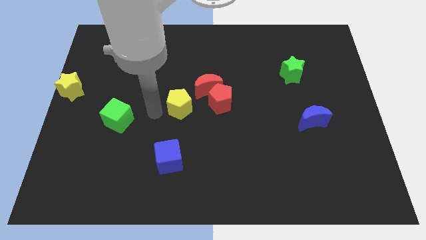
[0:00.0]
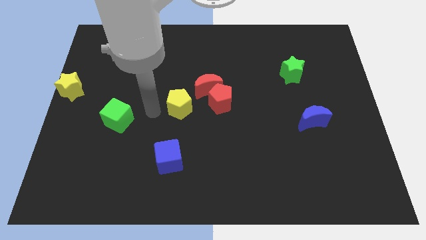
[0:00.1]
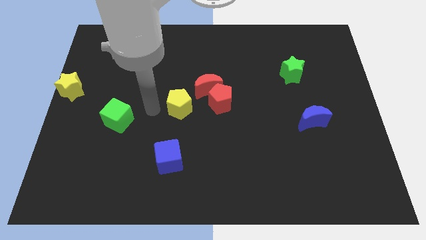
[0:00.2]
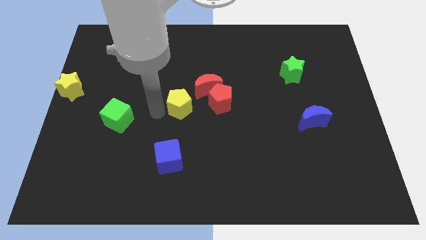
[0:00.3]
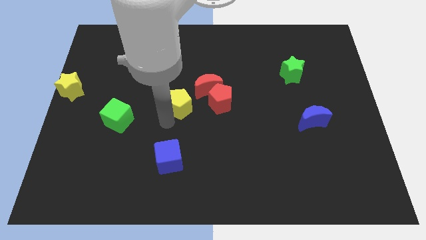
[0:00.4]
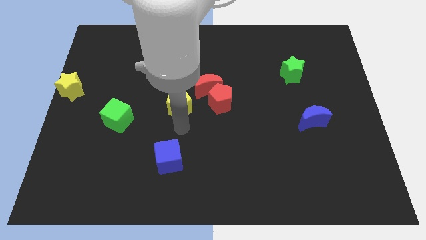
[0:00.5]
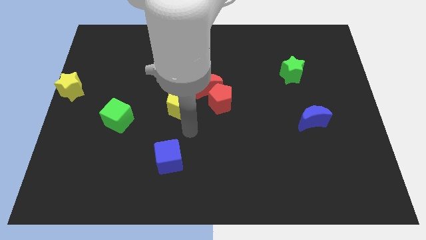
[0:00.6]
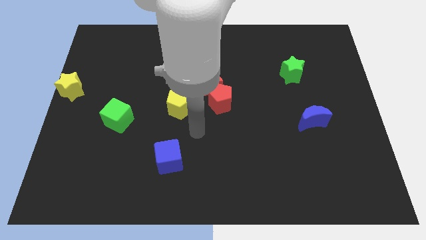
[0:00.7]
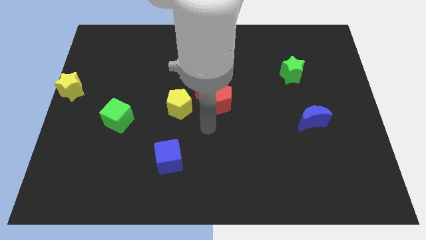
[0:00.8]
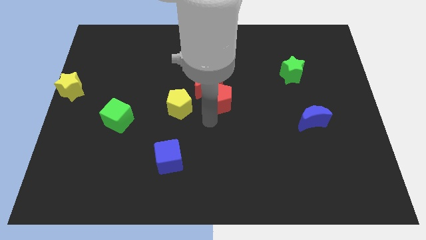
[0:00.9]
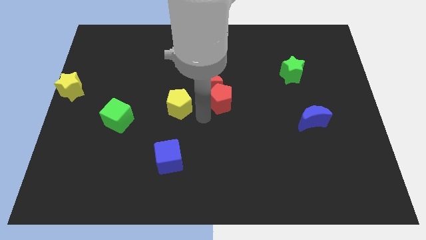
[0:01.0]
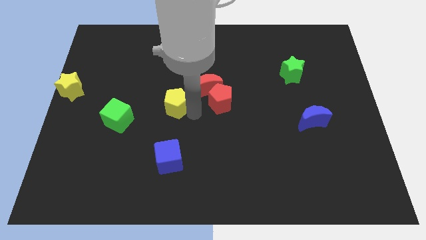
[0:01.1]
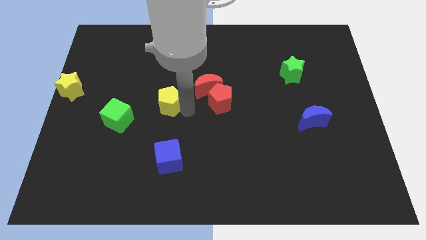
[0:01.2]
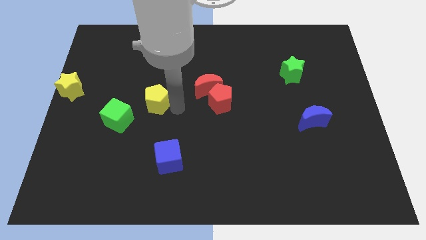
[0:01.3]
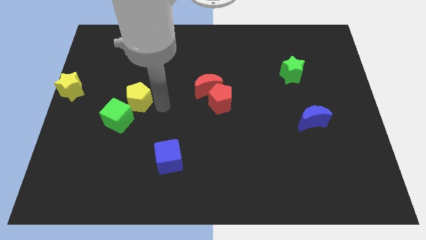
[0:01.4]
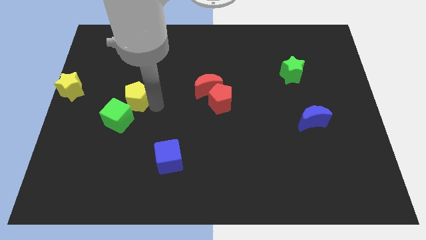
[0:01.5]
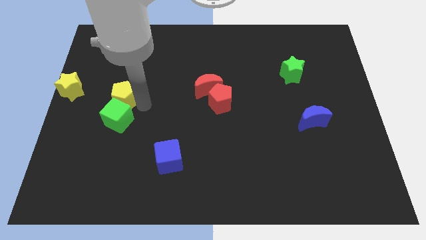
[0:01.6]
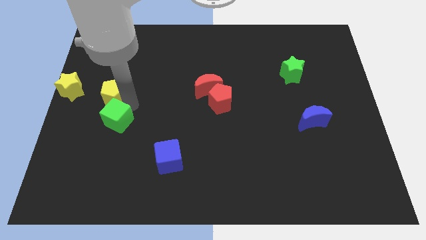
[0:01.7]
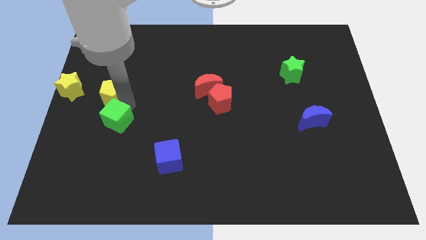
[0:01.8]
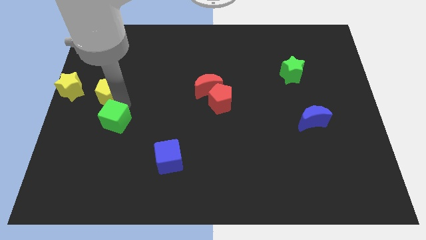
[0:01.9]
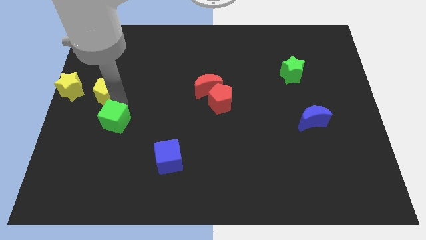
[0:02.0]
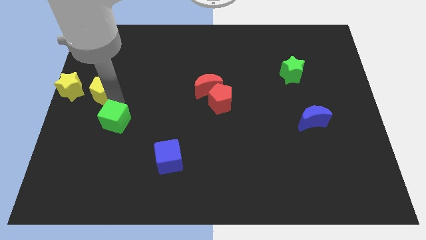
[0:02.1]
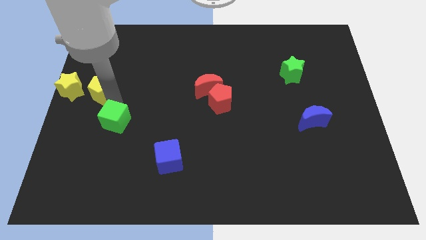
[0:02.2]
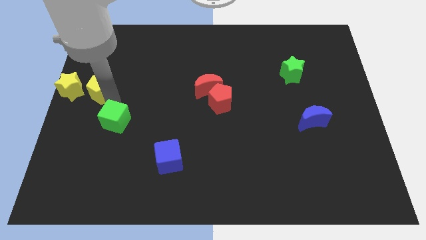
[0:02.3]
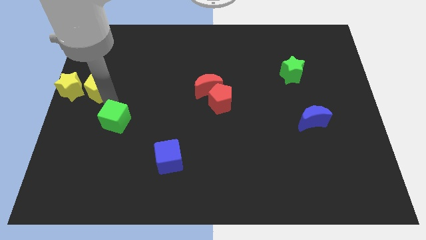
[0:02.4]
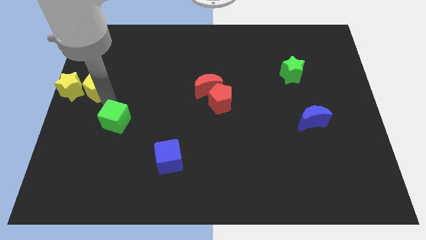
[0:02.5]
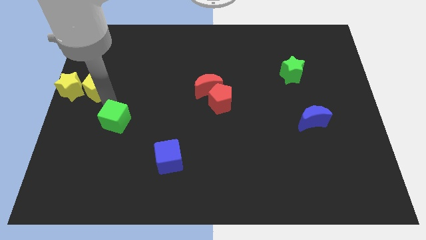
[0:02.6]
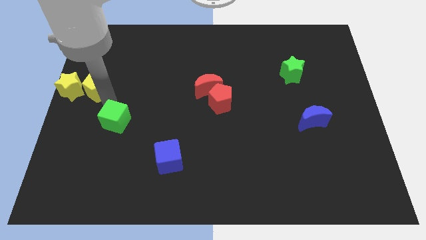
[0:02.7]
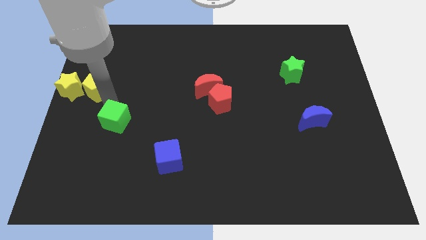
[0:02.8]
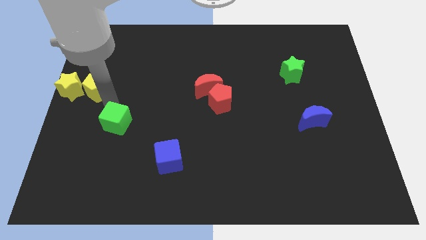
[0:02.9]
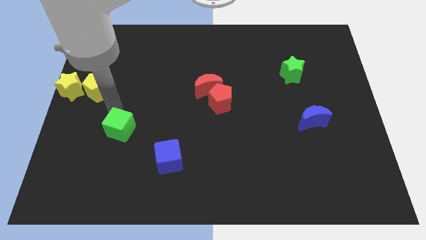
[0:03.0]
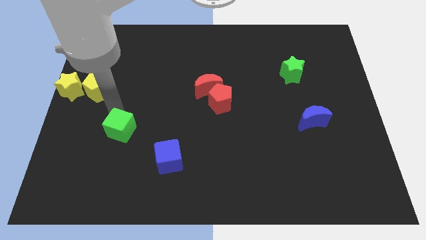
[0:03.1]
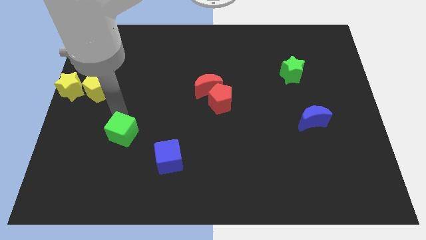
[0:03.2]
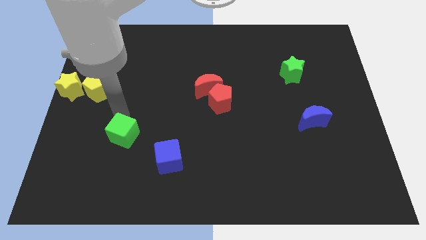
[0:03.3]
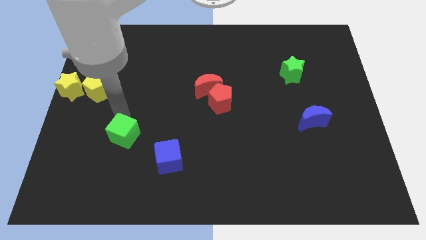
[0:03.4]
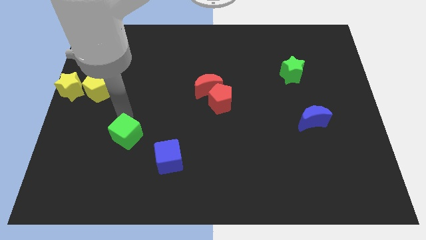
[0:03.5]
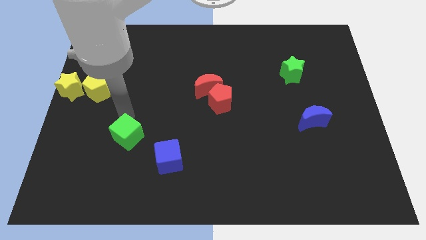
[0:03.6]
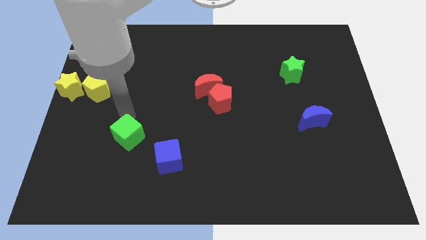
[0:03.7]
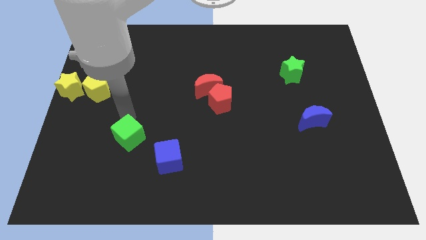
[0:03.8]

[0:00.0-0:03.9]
push the green cube to the top left side of the blue cube

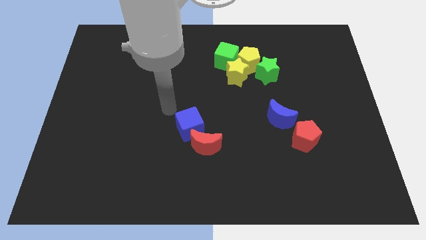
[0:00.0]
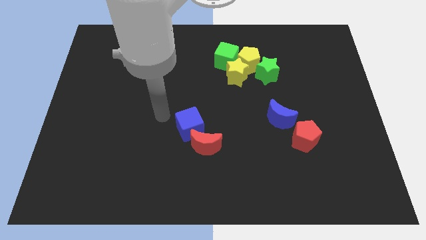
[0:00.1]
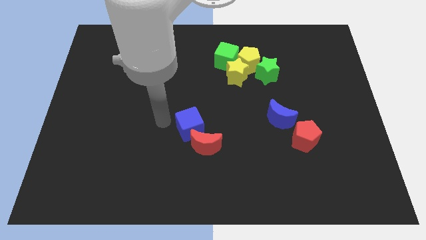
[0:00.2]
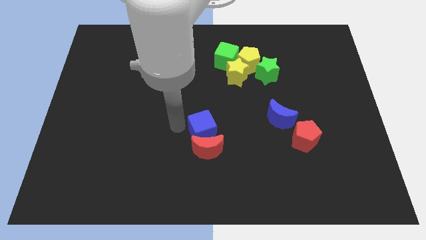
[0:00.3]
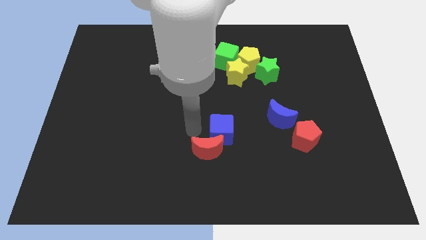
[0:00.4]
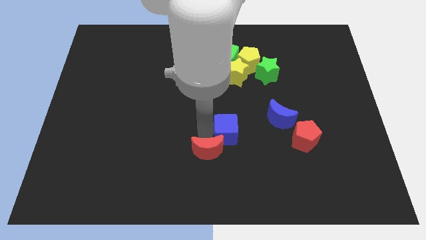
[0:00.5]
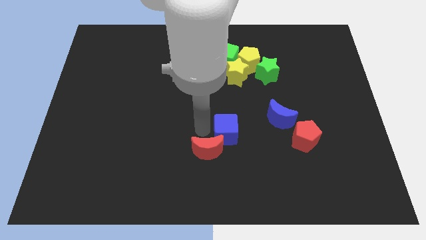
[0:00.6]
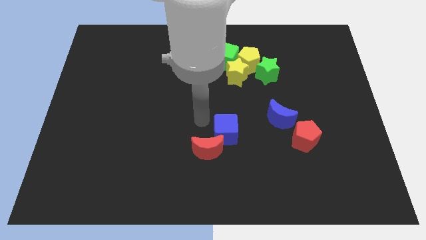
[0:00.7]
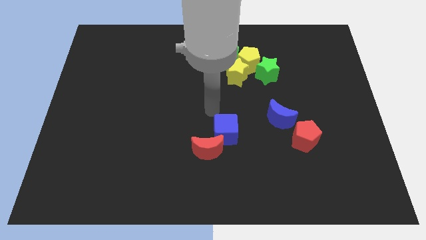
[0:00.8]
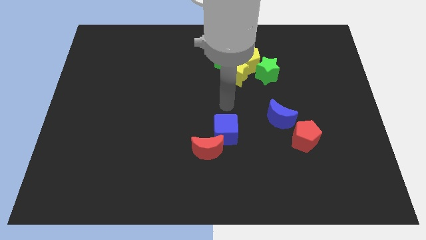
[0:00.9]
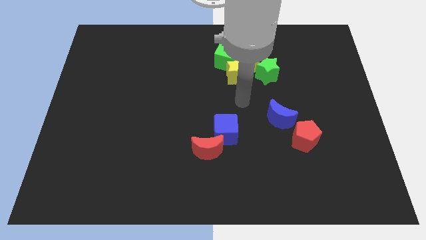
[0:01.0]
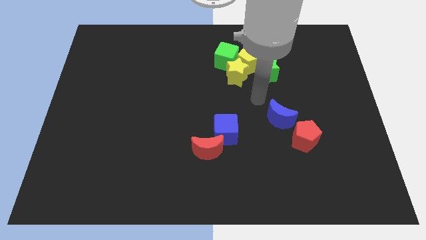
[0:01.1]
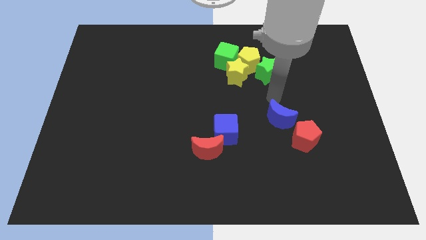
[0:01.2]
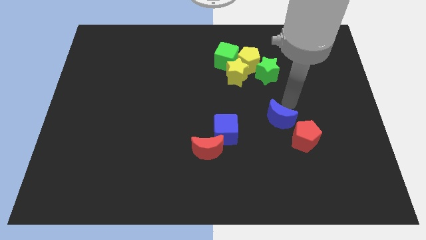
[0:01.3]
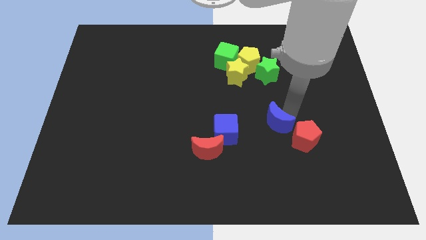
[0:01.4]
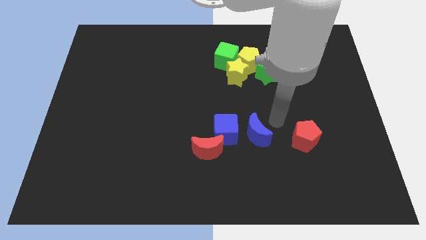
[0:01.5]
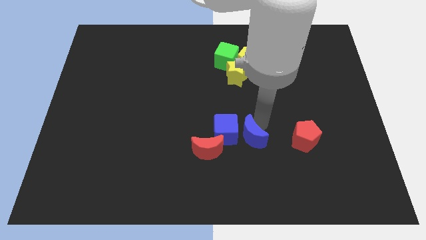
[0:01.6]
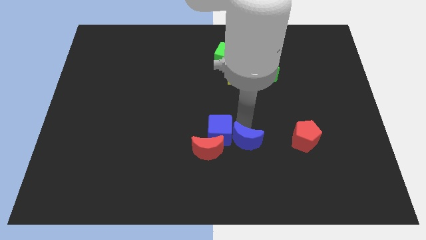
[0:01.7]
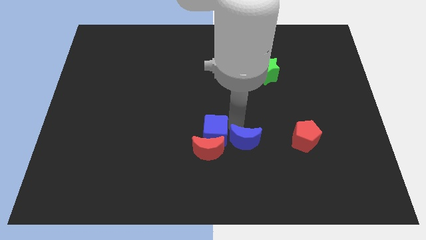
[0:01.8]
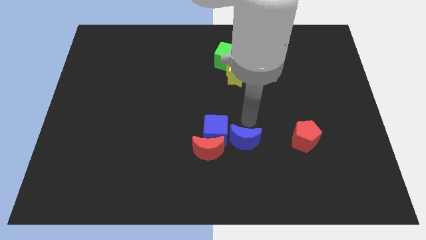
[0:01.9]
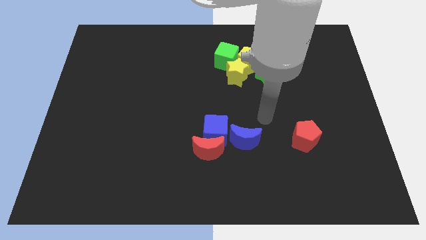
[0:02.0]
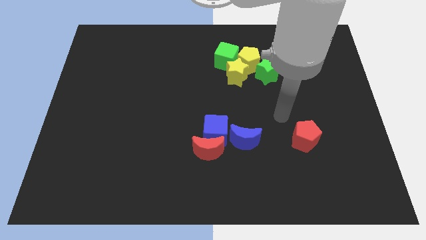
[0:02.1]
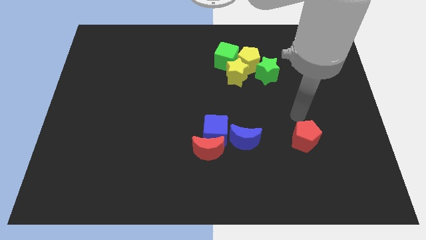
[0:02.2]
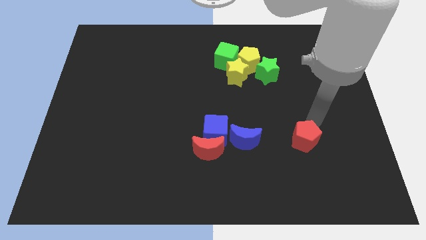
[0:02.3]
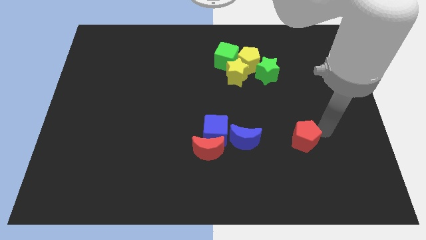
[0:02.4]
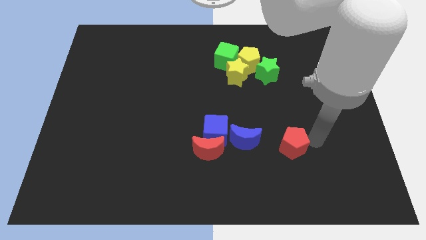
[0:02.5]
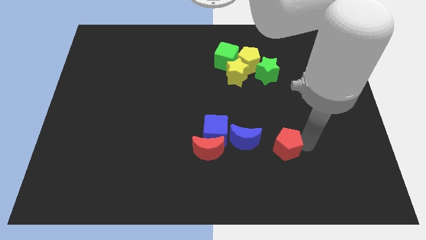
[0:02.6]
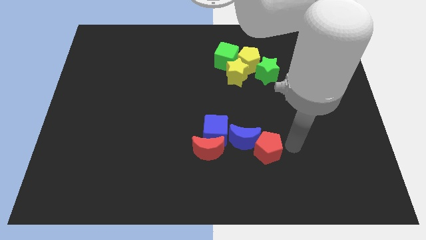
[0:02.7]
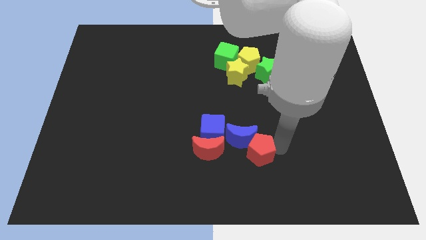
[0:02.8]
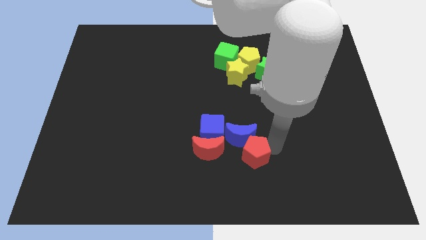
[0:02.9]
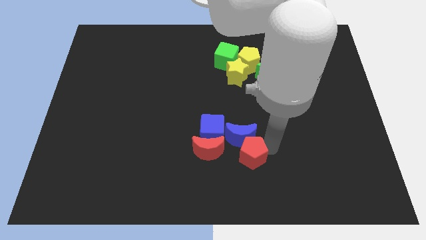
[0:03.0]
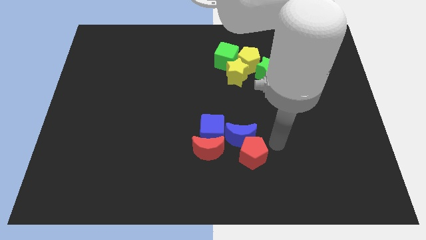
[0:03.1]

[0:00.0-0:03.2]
arrange the red blocks and blue blocks towards the bottom center

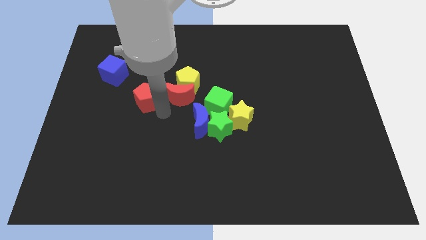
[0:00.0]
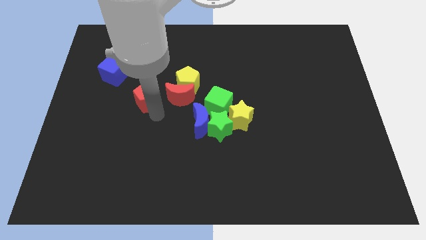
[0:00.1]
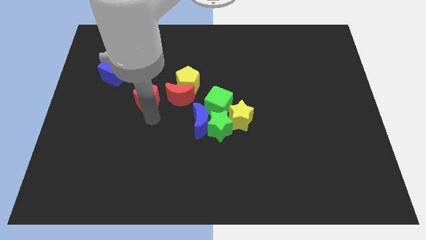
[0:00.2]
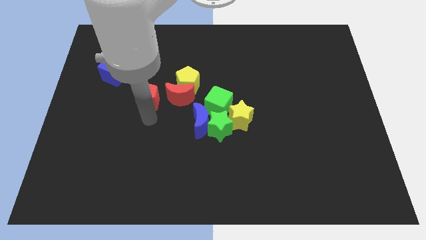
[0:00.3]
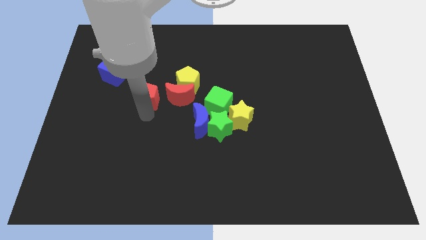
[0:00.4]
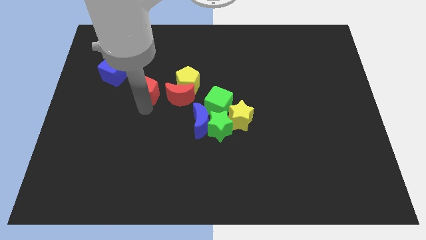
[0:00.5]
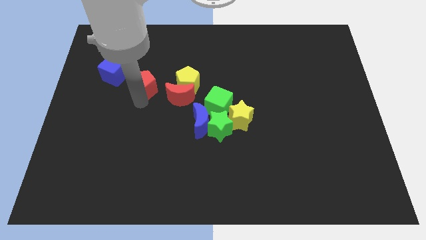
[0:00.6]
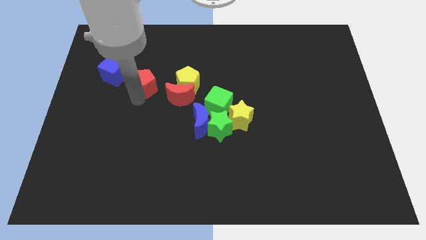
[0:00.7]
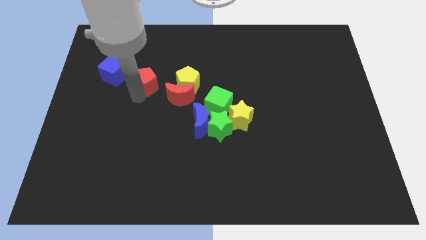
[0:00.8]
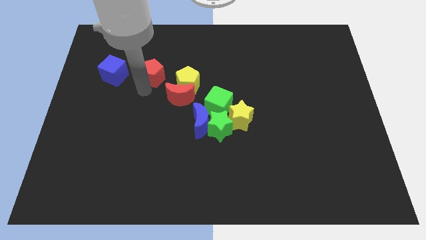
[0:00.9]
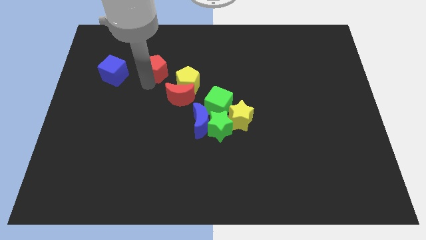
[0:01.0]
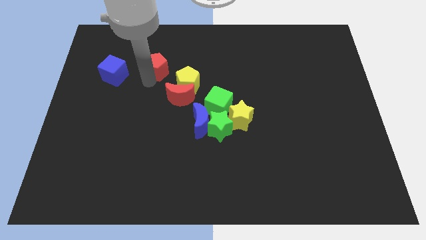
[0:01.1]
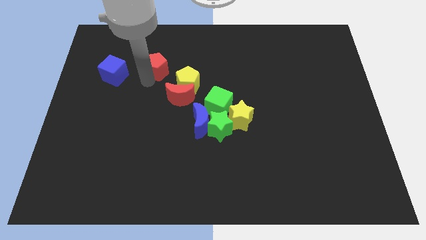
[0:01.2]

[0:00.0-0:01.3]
slightly push the red pentagon to the top

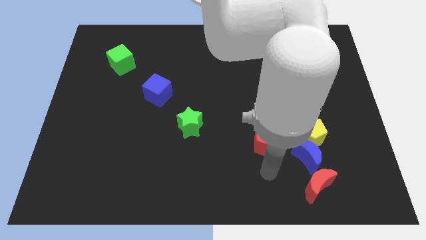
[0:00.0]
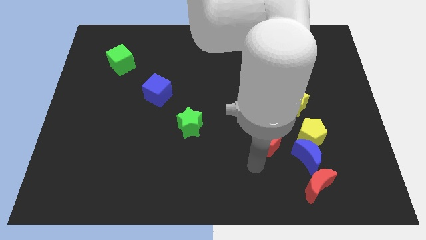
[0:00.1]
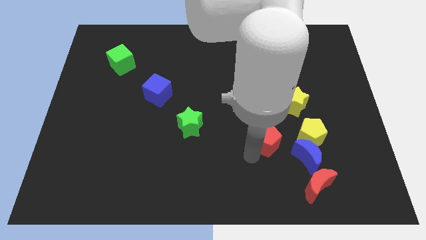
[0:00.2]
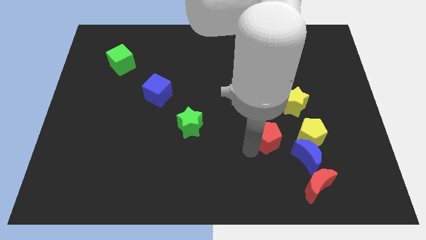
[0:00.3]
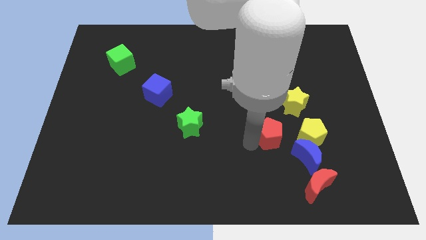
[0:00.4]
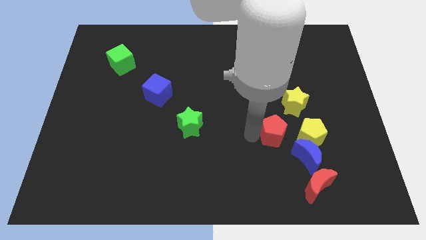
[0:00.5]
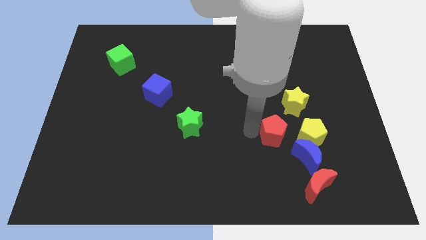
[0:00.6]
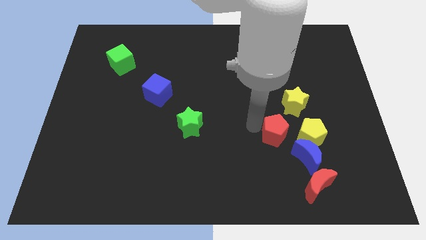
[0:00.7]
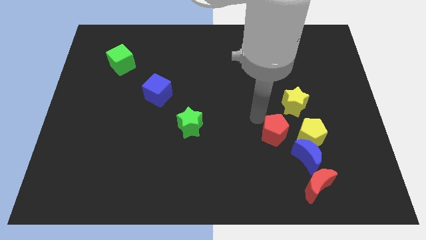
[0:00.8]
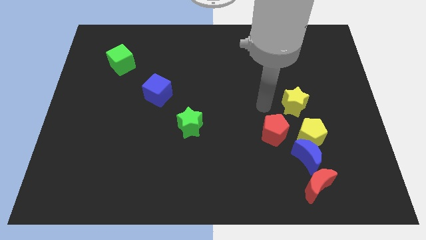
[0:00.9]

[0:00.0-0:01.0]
move the red pentagon slightly below the yellow star
